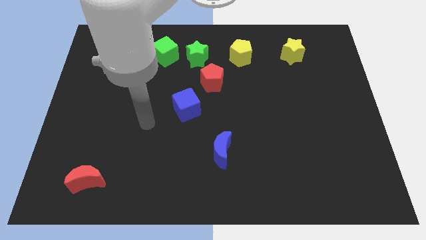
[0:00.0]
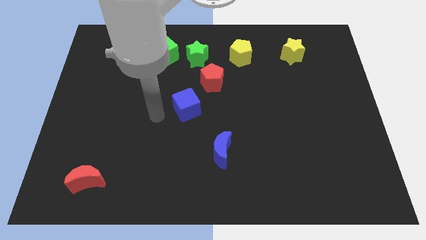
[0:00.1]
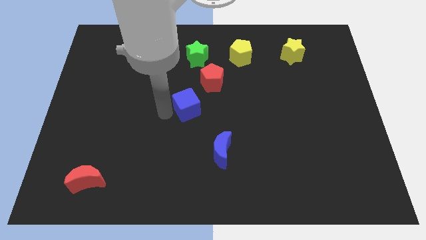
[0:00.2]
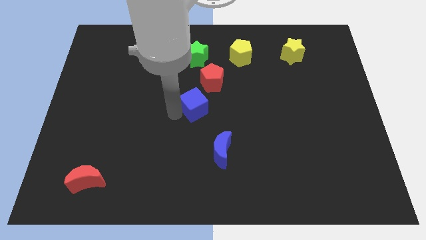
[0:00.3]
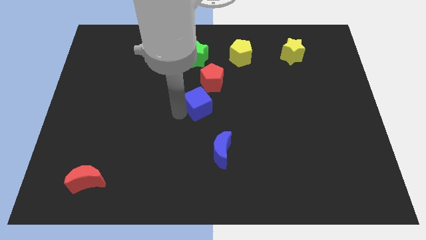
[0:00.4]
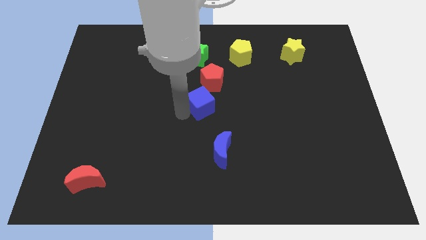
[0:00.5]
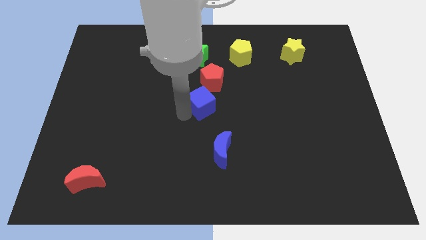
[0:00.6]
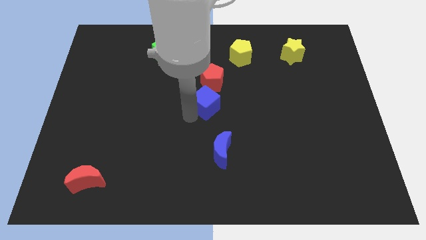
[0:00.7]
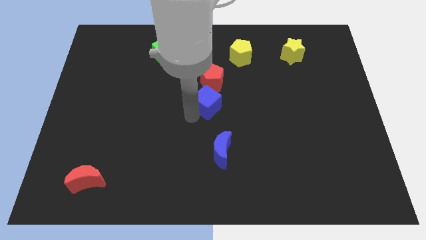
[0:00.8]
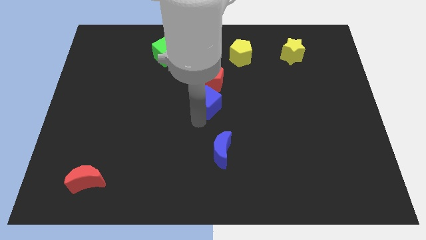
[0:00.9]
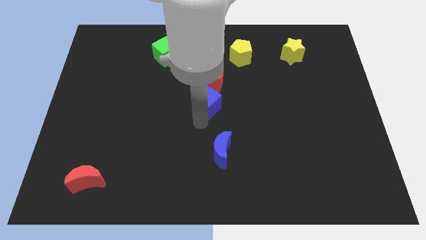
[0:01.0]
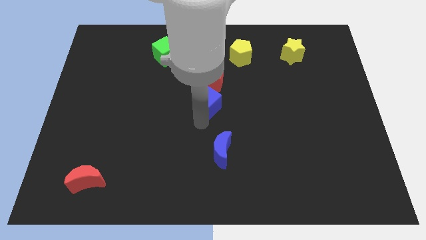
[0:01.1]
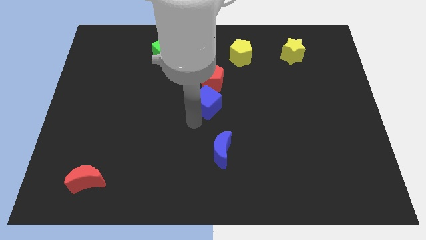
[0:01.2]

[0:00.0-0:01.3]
push the blue cube to the bottom of red pentagon

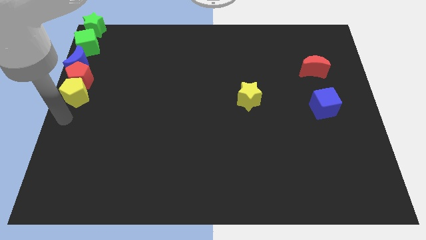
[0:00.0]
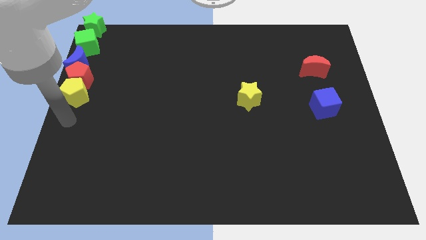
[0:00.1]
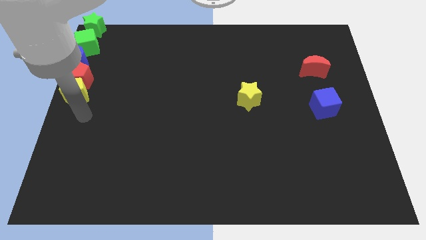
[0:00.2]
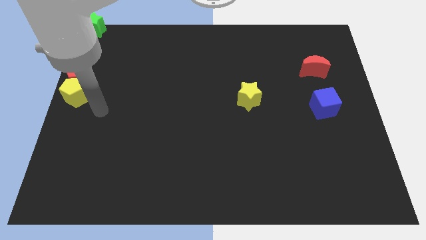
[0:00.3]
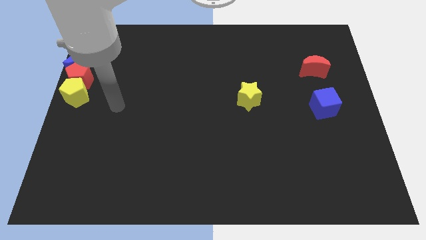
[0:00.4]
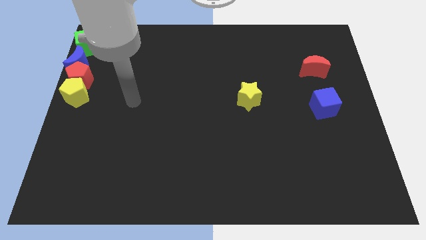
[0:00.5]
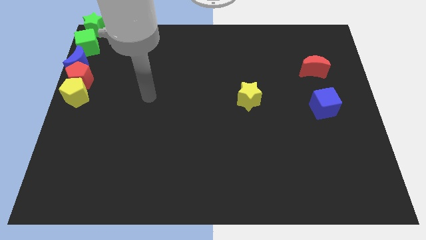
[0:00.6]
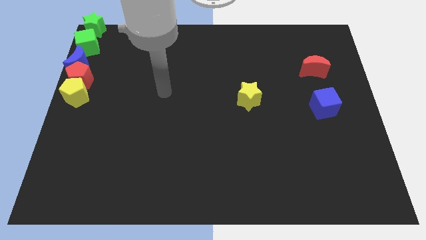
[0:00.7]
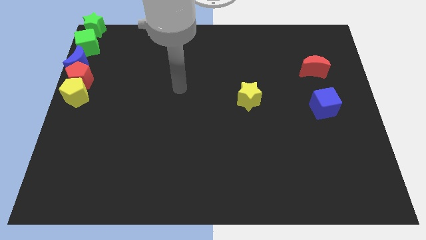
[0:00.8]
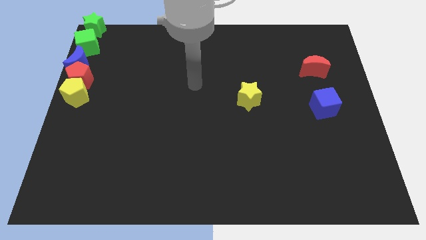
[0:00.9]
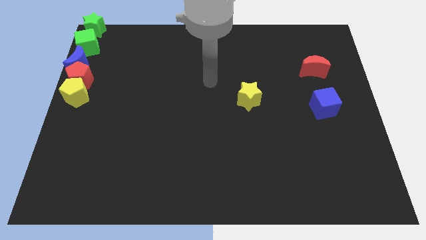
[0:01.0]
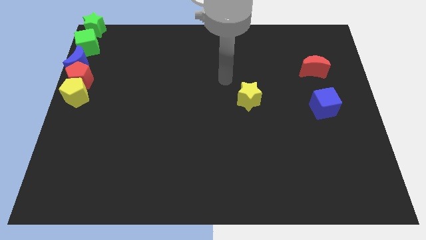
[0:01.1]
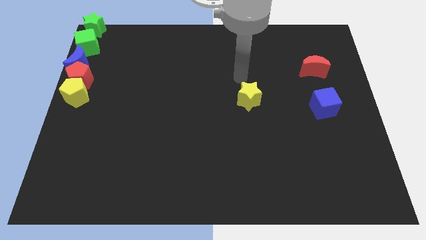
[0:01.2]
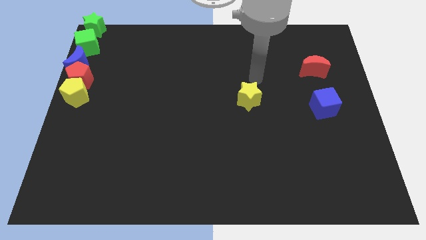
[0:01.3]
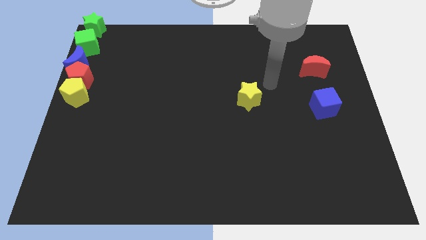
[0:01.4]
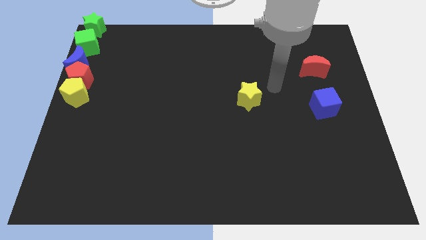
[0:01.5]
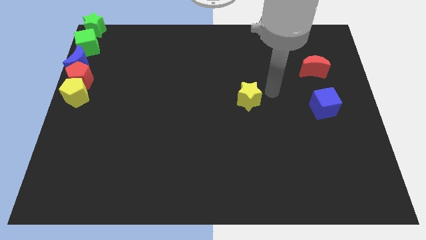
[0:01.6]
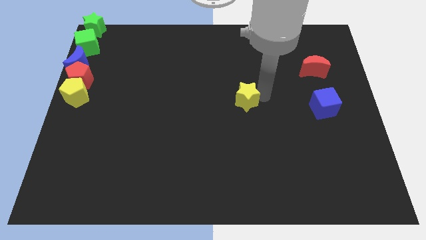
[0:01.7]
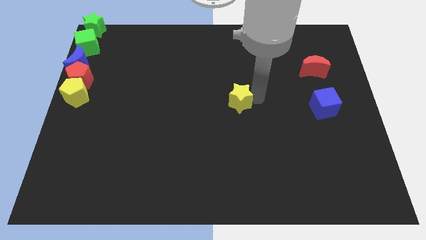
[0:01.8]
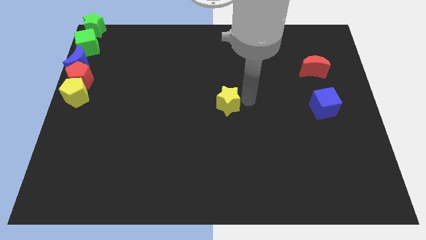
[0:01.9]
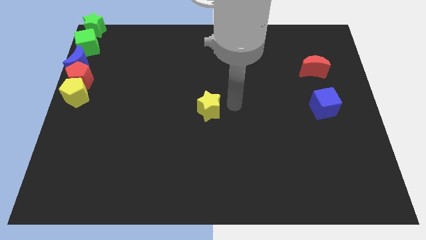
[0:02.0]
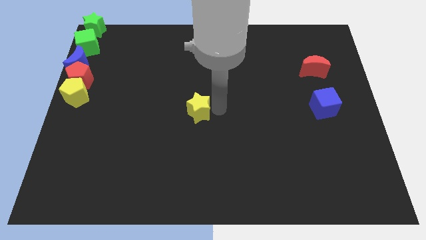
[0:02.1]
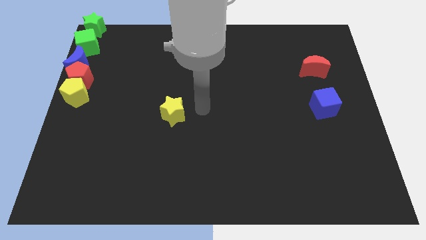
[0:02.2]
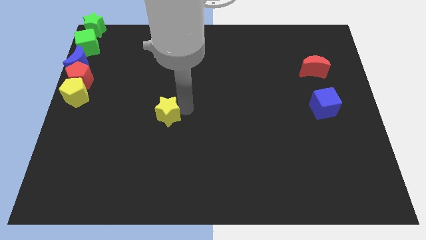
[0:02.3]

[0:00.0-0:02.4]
move the arm away from the yellow pentagon

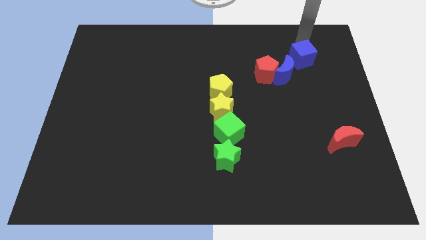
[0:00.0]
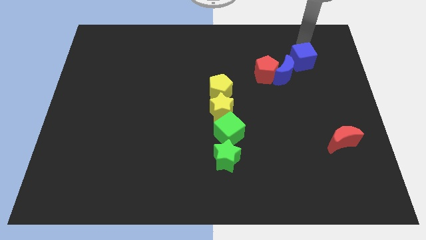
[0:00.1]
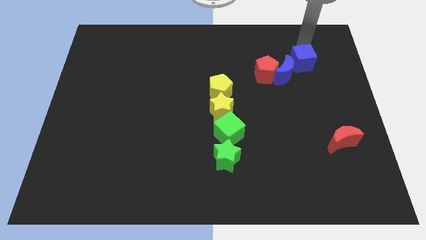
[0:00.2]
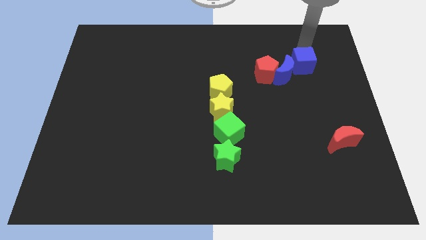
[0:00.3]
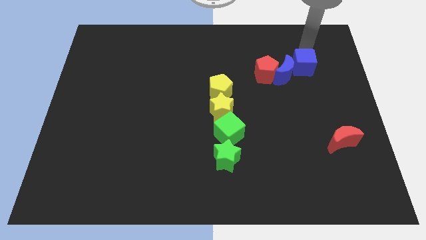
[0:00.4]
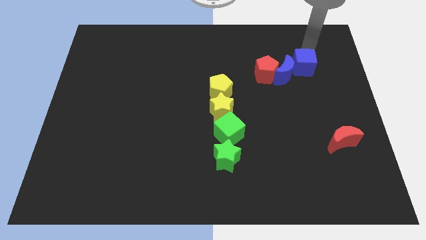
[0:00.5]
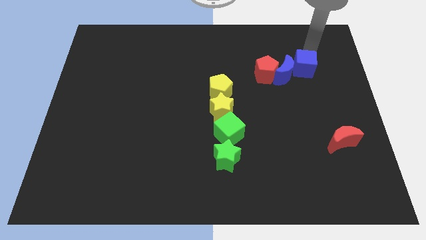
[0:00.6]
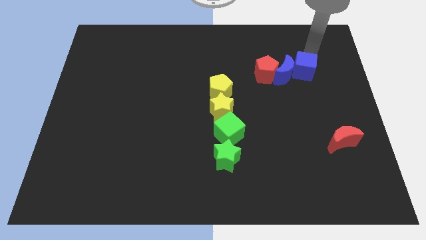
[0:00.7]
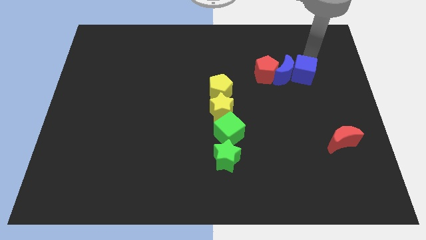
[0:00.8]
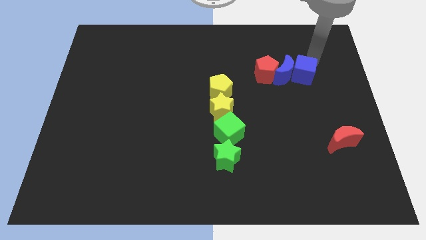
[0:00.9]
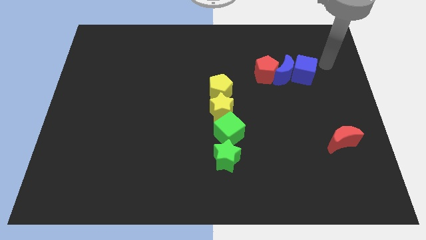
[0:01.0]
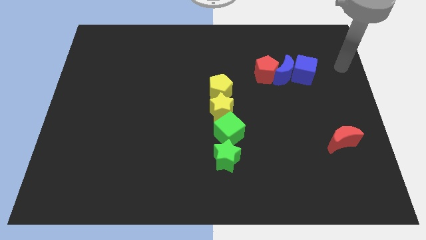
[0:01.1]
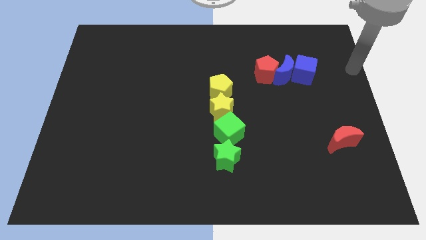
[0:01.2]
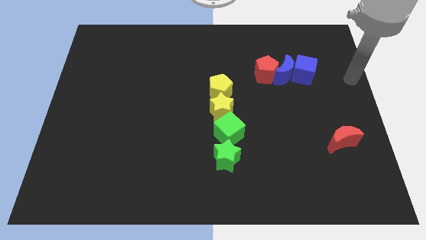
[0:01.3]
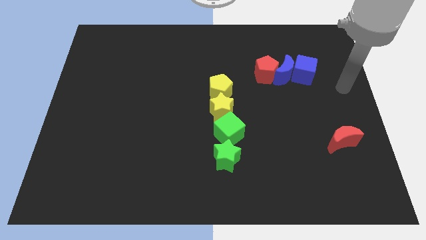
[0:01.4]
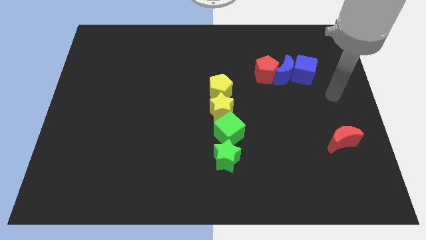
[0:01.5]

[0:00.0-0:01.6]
place the blue cube closer to the blue crescent

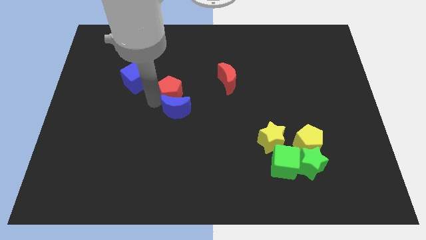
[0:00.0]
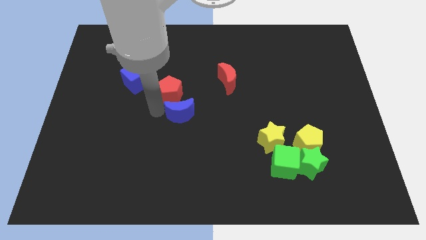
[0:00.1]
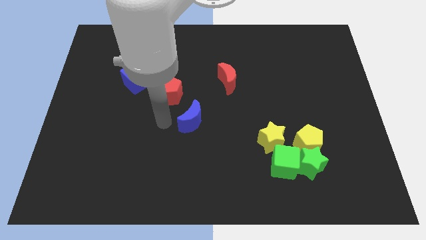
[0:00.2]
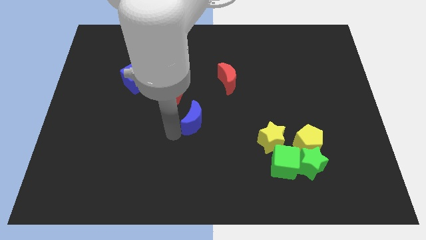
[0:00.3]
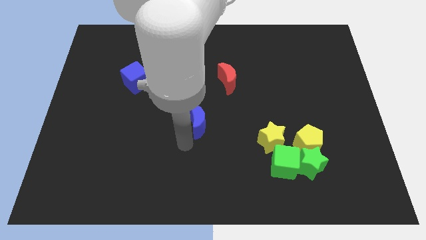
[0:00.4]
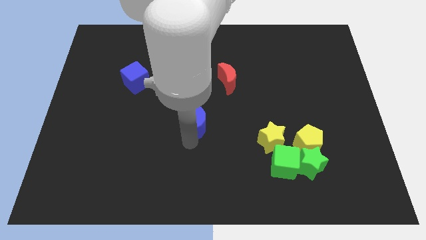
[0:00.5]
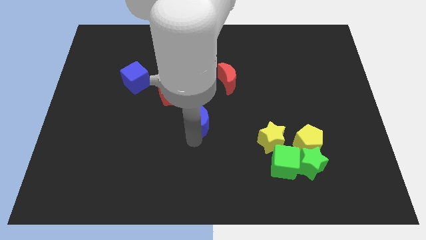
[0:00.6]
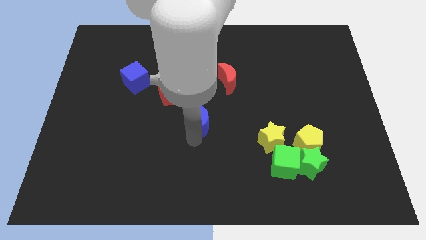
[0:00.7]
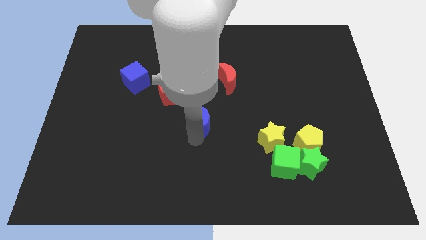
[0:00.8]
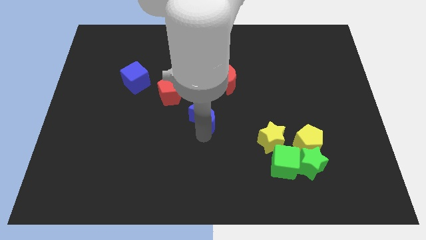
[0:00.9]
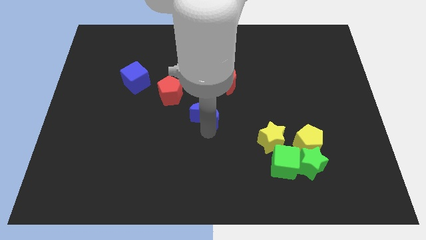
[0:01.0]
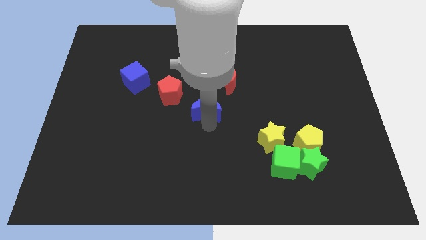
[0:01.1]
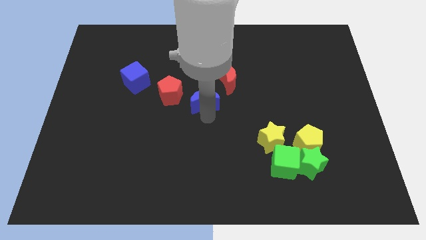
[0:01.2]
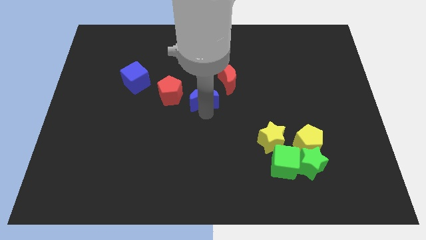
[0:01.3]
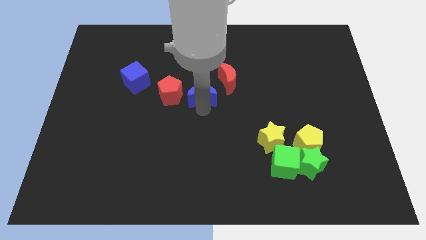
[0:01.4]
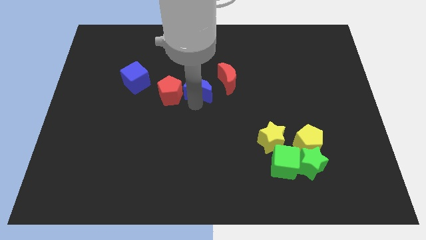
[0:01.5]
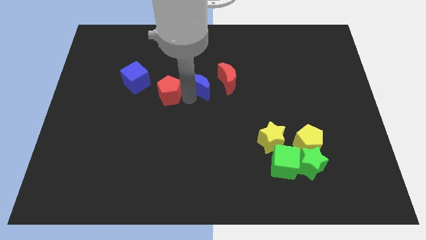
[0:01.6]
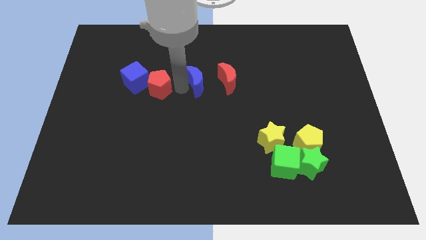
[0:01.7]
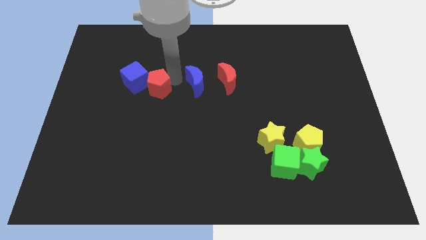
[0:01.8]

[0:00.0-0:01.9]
place the blue crescent in between the red pentagon and the red crescent

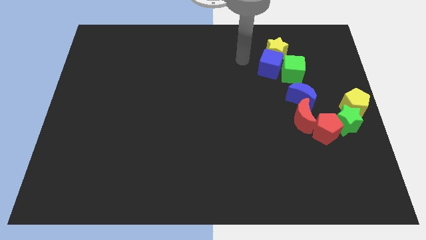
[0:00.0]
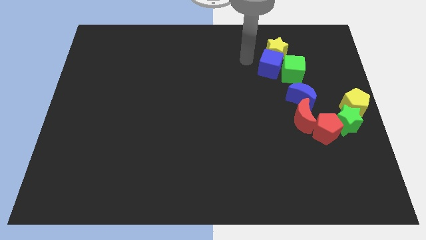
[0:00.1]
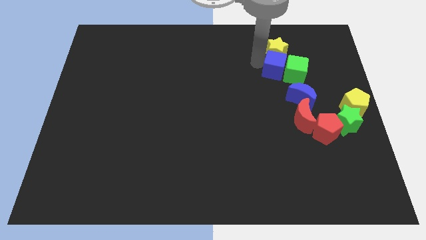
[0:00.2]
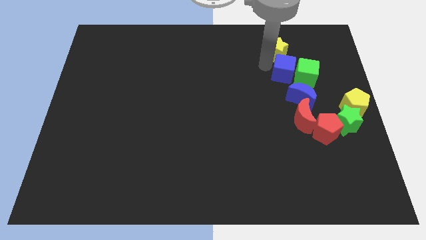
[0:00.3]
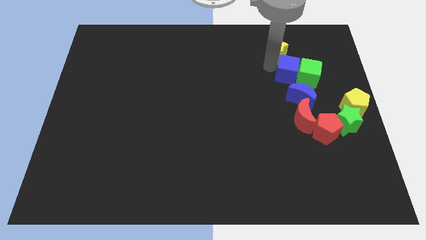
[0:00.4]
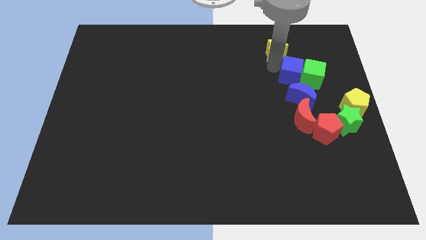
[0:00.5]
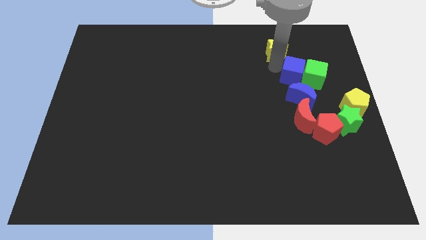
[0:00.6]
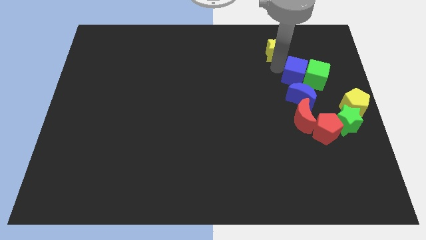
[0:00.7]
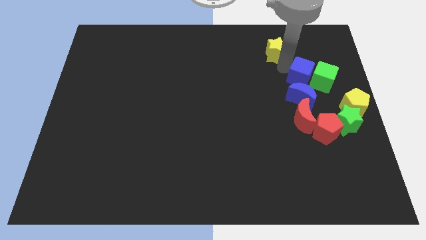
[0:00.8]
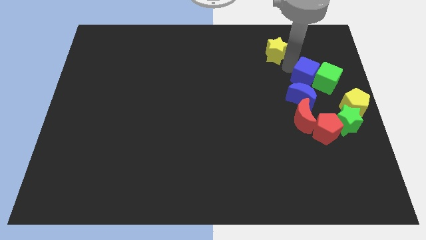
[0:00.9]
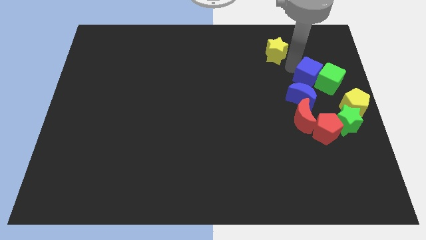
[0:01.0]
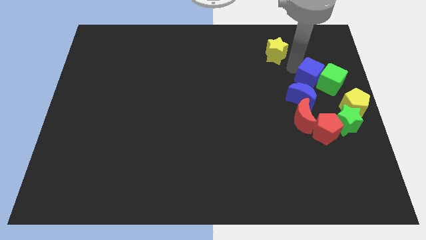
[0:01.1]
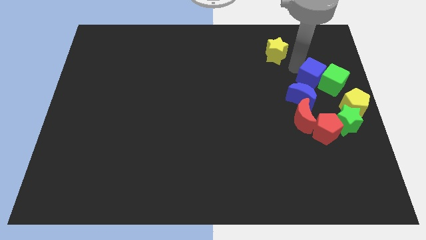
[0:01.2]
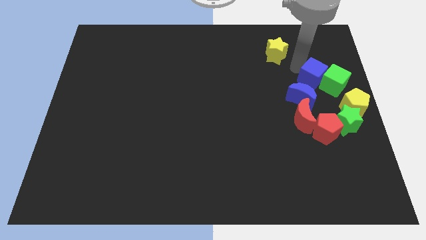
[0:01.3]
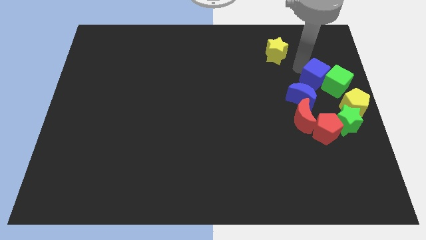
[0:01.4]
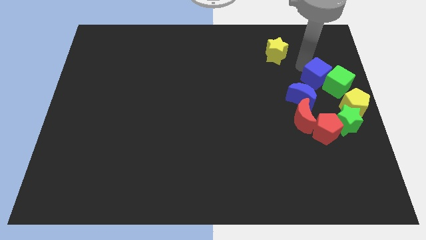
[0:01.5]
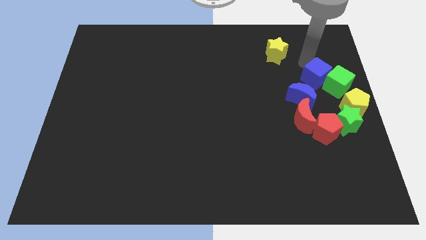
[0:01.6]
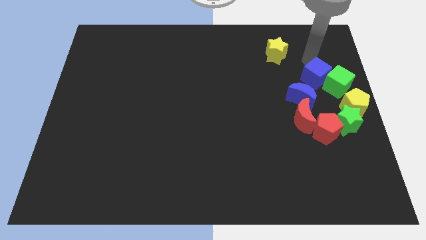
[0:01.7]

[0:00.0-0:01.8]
push the blue cube and green cube to the right center of the board
